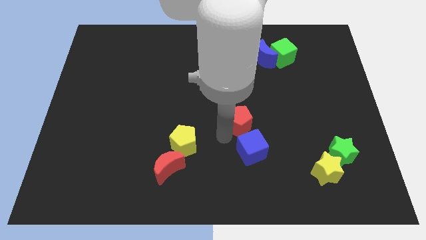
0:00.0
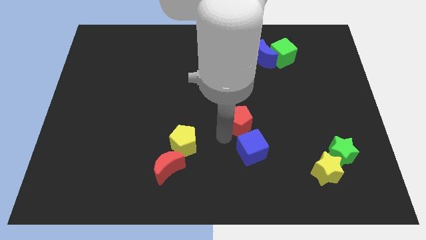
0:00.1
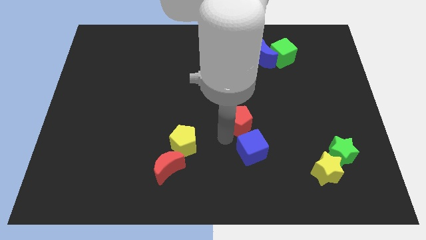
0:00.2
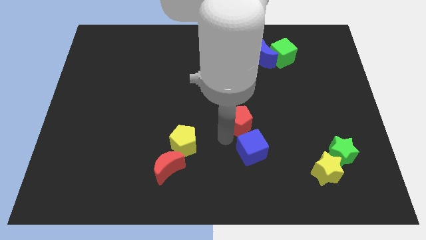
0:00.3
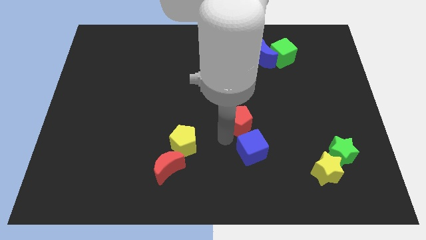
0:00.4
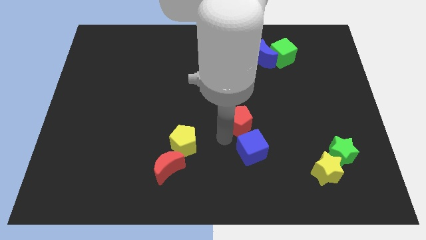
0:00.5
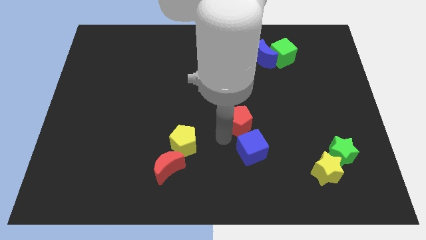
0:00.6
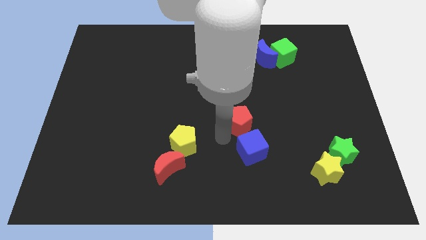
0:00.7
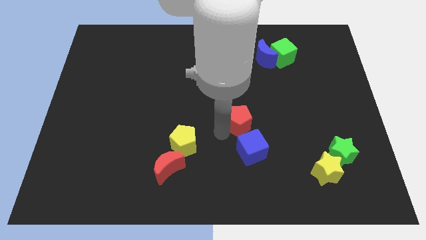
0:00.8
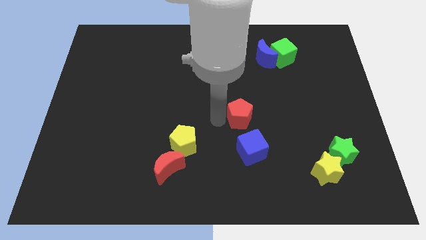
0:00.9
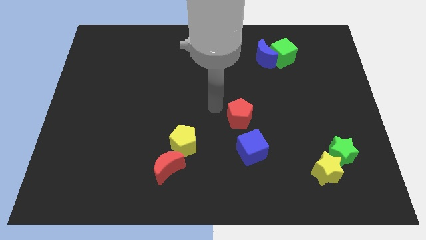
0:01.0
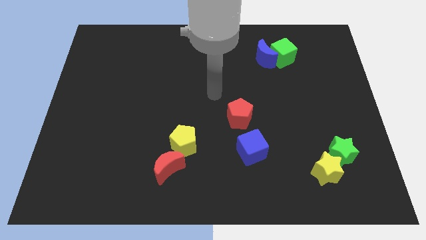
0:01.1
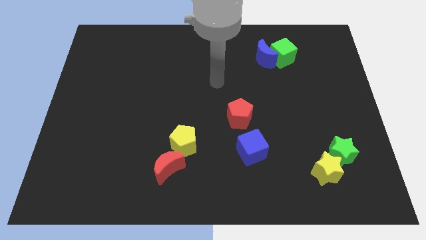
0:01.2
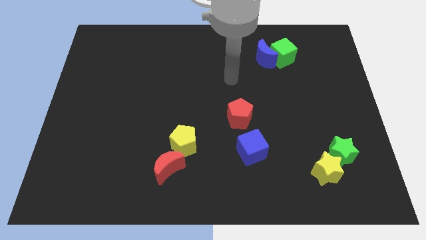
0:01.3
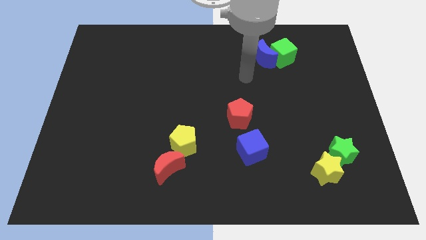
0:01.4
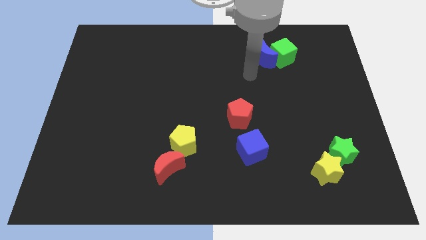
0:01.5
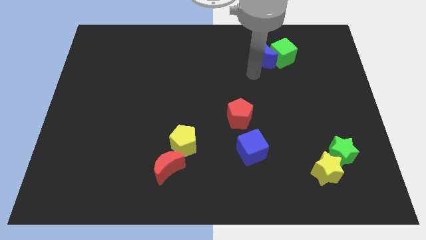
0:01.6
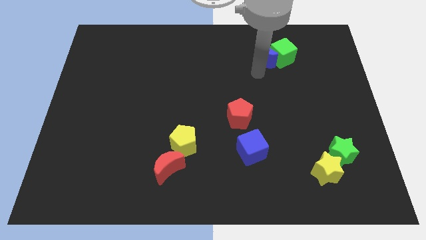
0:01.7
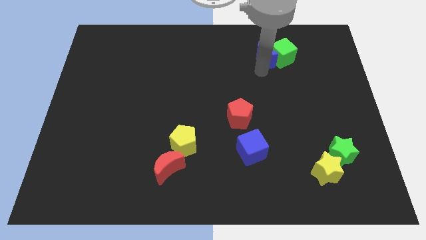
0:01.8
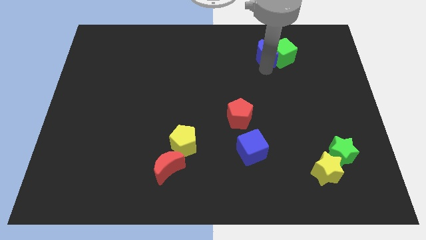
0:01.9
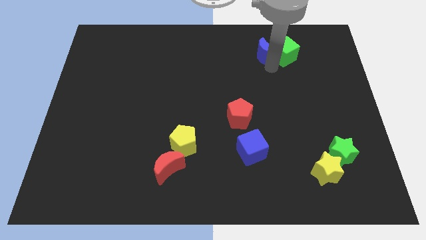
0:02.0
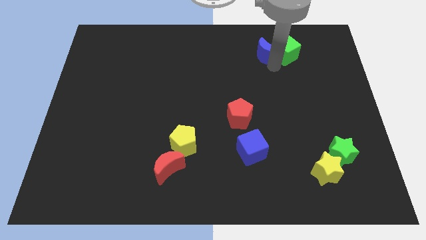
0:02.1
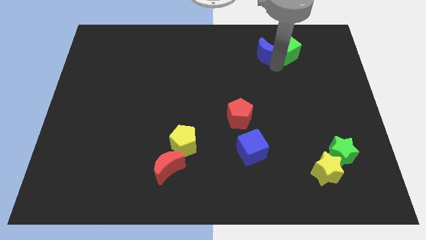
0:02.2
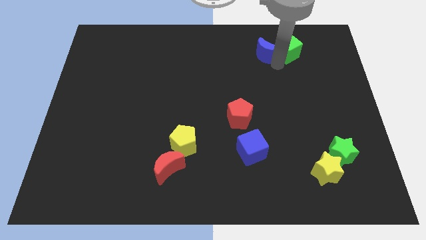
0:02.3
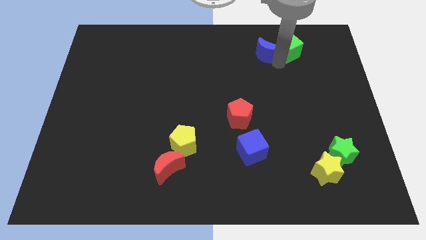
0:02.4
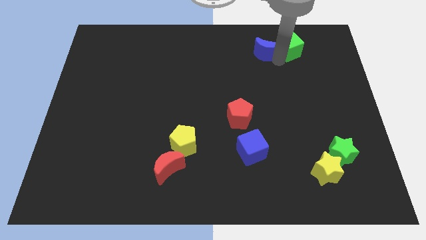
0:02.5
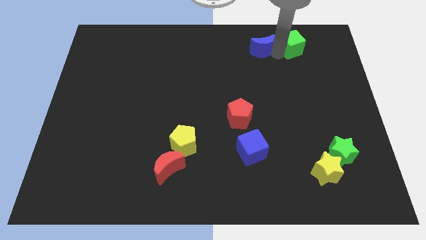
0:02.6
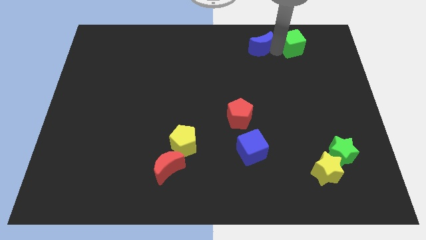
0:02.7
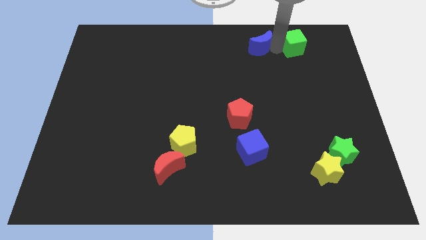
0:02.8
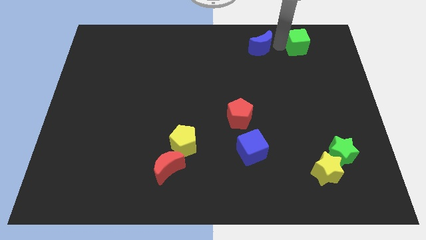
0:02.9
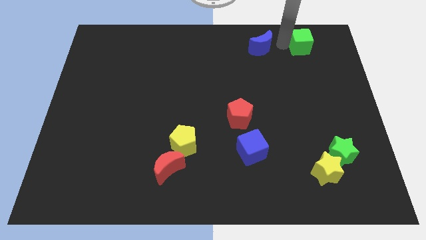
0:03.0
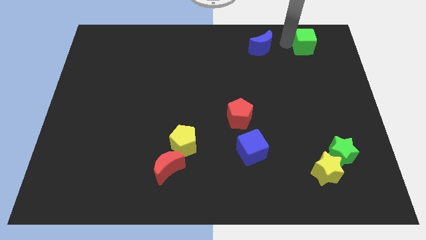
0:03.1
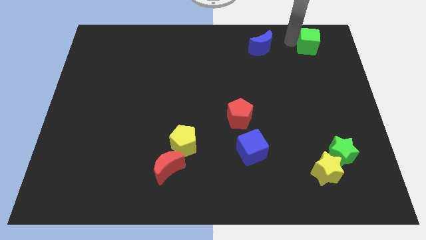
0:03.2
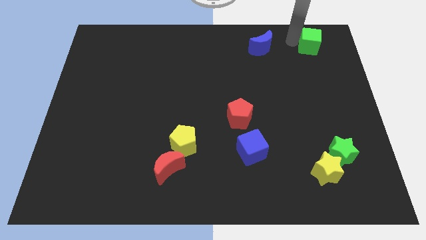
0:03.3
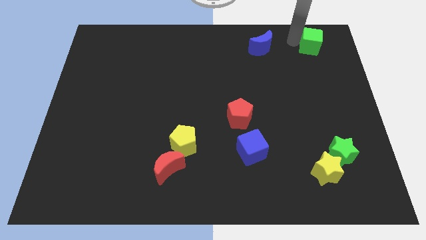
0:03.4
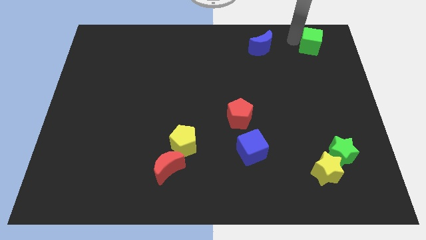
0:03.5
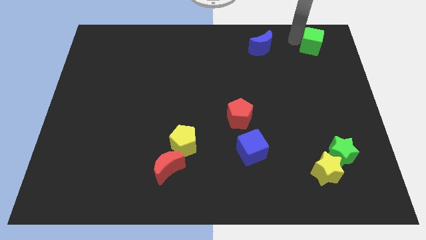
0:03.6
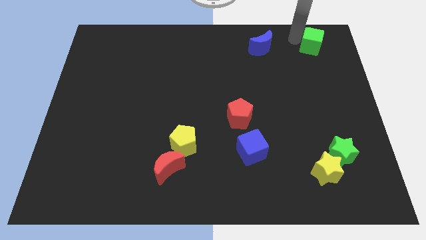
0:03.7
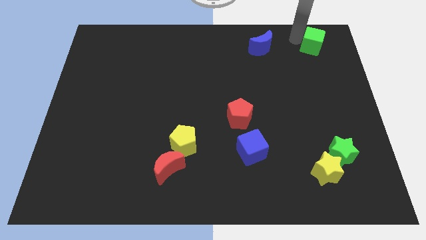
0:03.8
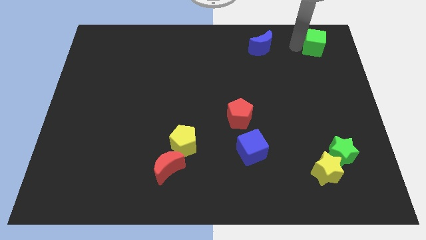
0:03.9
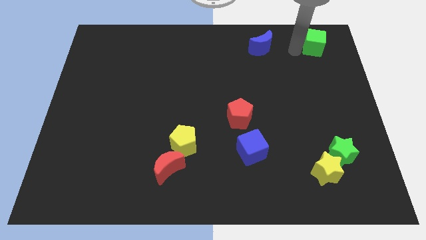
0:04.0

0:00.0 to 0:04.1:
separate the green cube and the blue moon

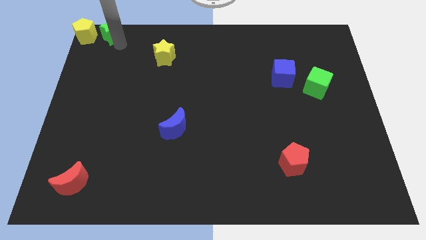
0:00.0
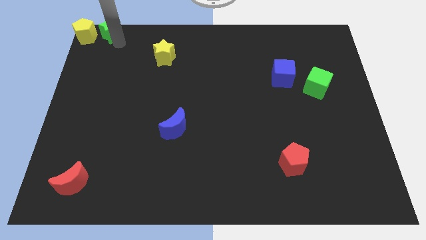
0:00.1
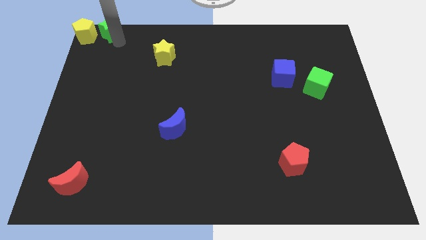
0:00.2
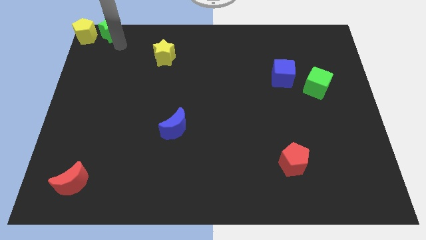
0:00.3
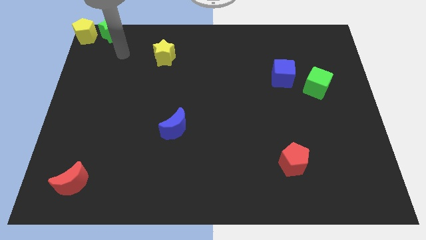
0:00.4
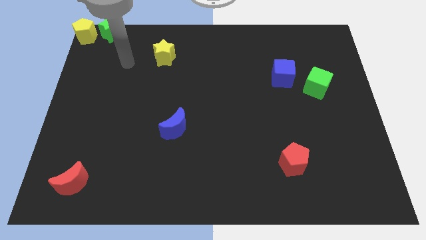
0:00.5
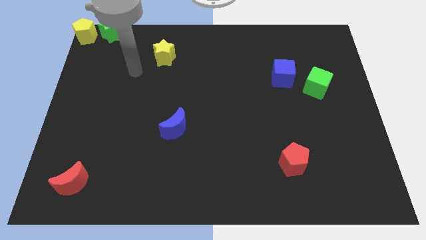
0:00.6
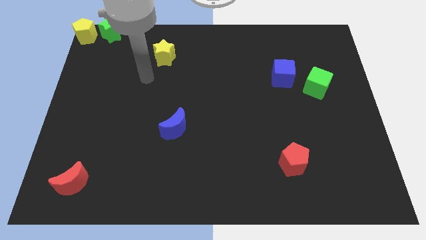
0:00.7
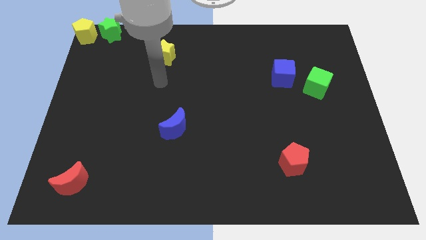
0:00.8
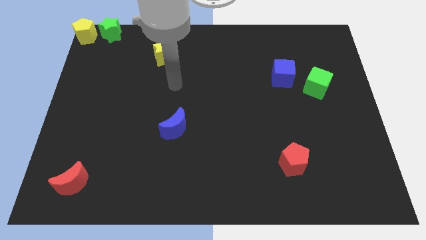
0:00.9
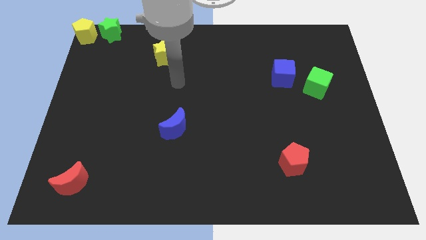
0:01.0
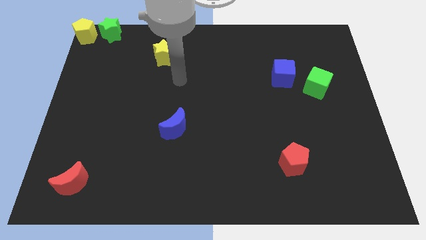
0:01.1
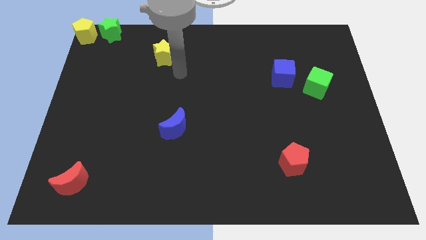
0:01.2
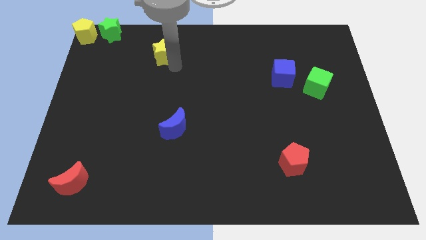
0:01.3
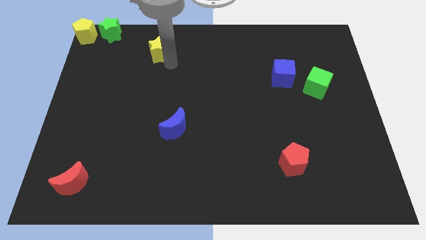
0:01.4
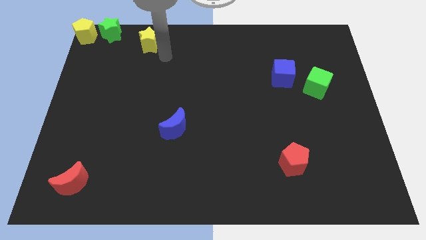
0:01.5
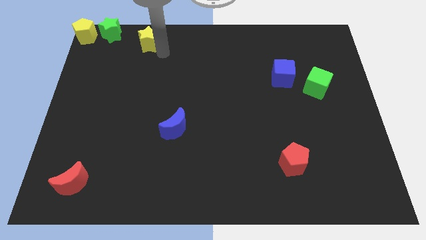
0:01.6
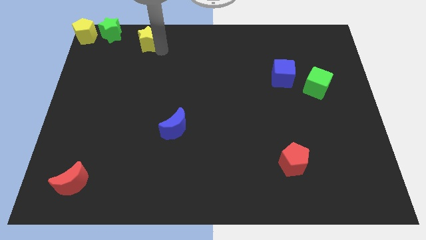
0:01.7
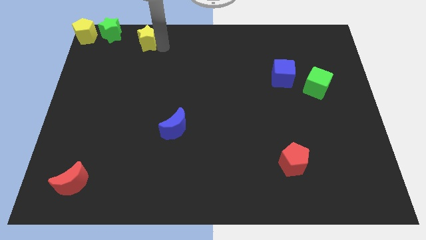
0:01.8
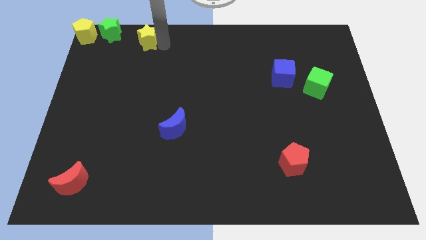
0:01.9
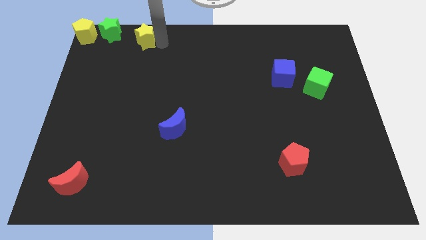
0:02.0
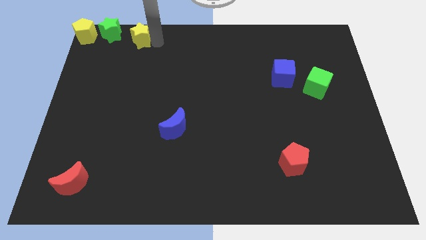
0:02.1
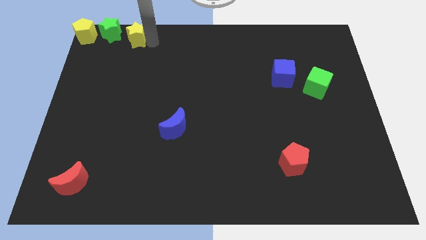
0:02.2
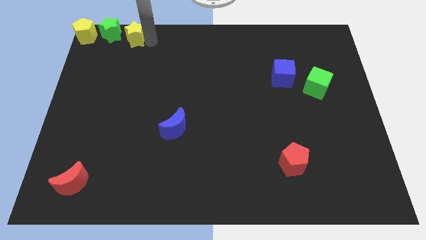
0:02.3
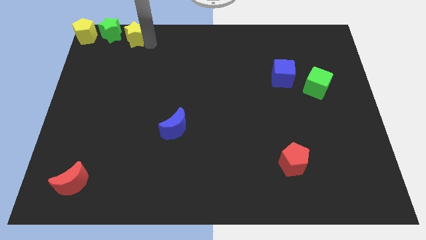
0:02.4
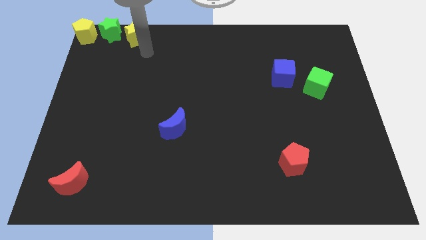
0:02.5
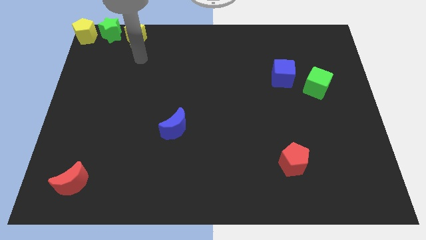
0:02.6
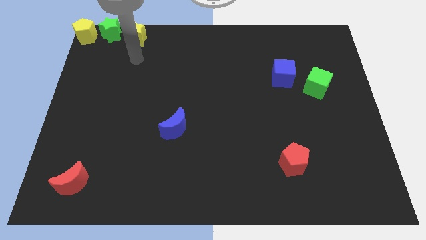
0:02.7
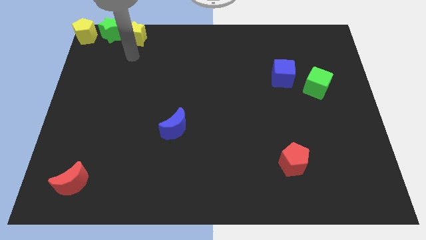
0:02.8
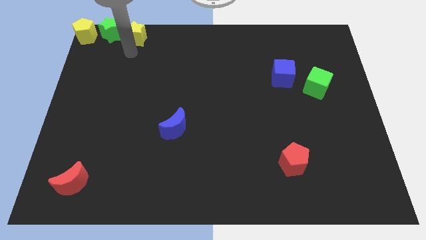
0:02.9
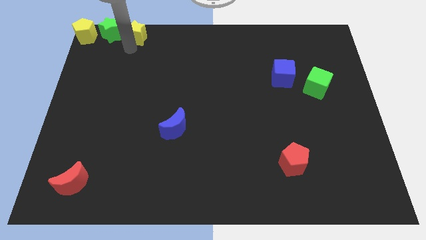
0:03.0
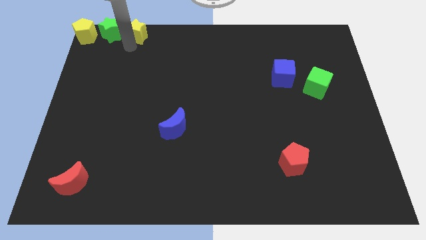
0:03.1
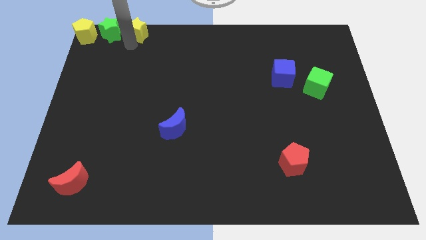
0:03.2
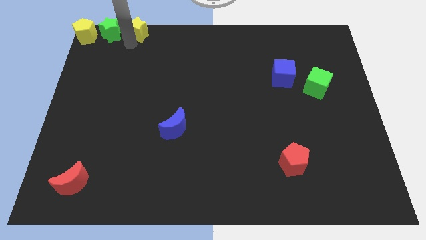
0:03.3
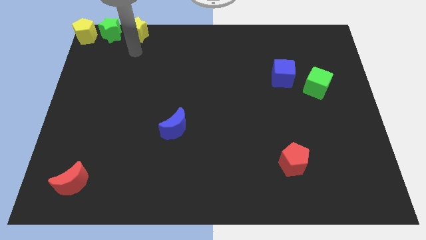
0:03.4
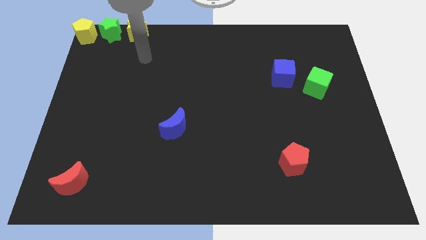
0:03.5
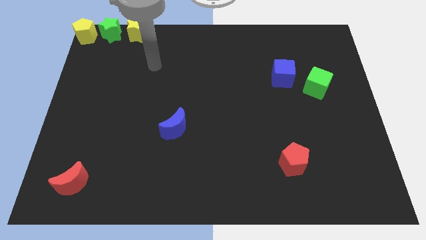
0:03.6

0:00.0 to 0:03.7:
move the yellow star right to the green star

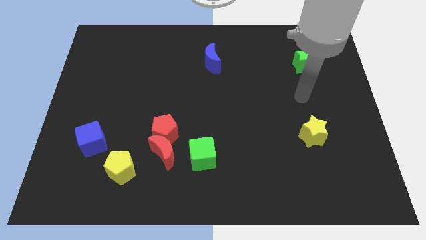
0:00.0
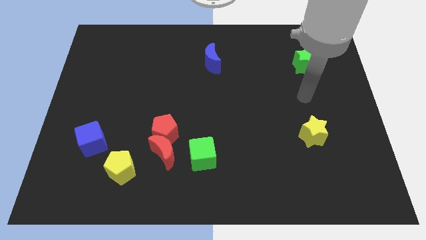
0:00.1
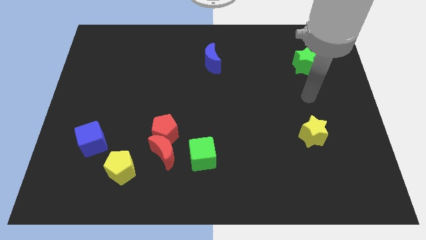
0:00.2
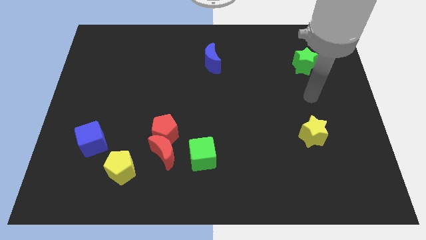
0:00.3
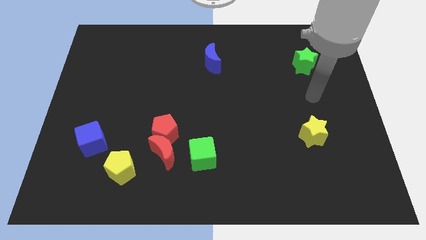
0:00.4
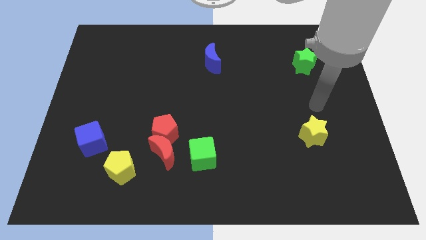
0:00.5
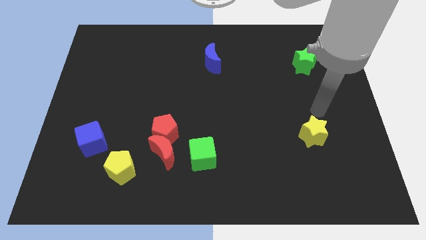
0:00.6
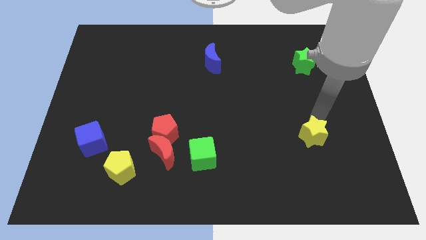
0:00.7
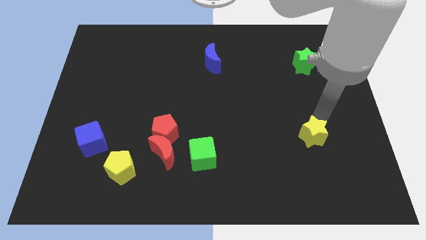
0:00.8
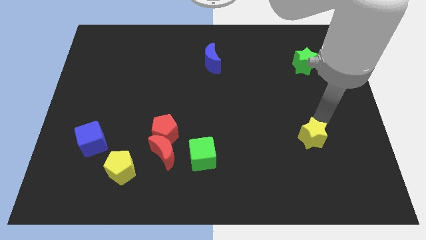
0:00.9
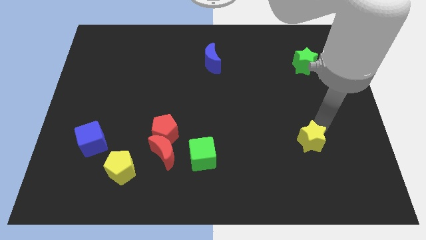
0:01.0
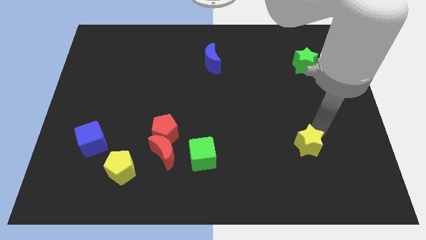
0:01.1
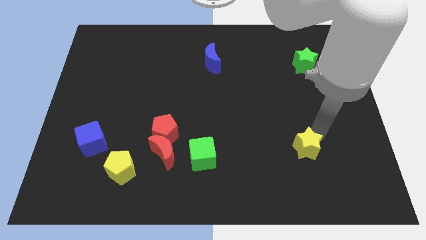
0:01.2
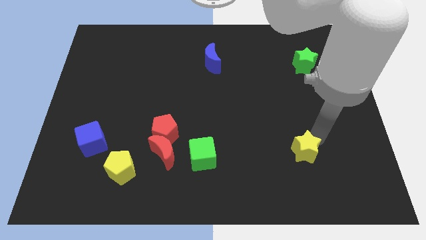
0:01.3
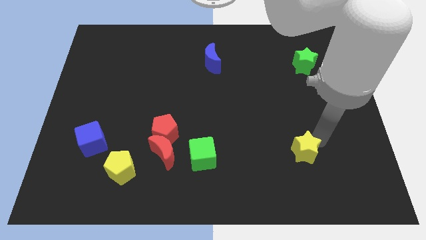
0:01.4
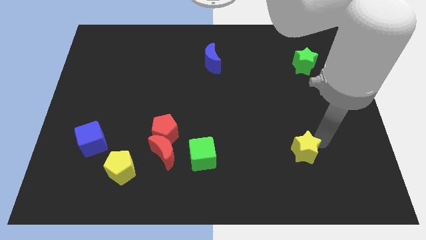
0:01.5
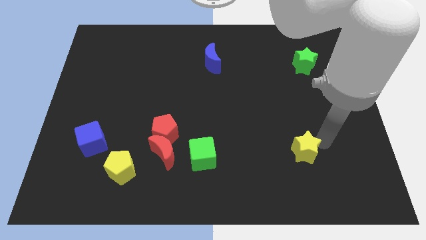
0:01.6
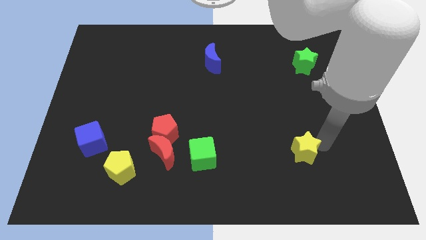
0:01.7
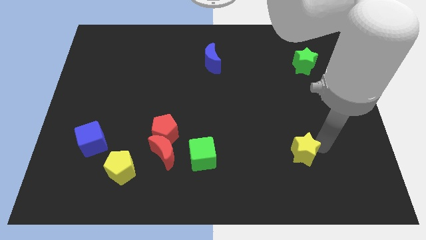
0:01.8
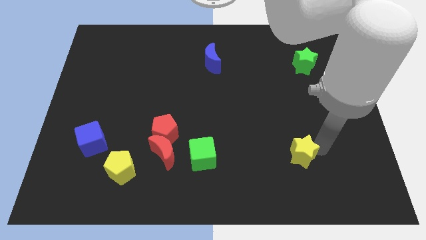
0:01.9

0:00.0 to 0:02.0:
push the yellow star to the right of the green cube
